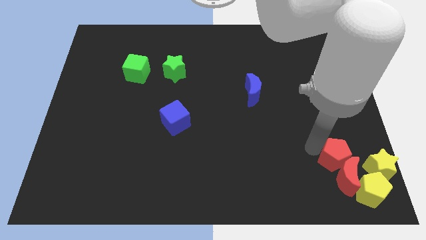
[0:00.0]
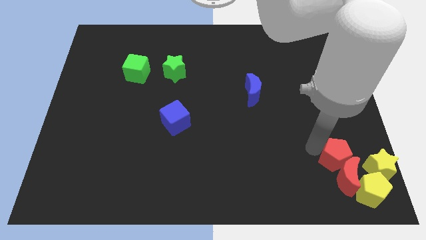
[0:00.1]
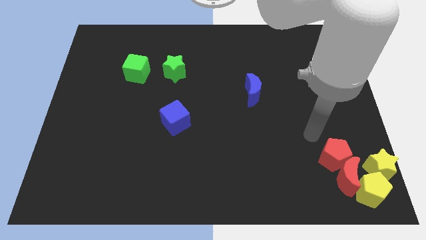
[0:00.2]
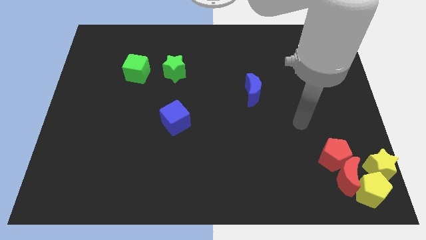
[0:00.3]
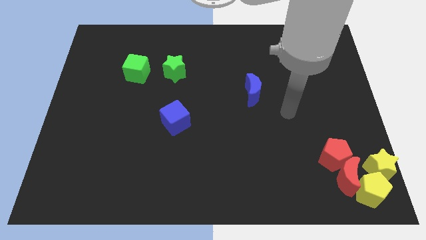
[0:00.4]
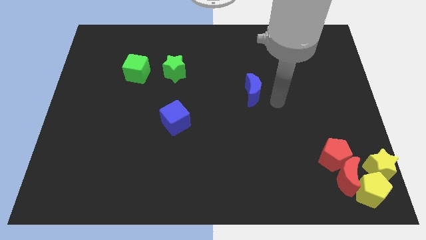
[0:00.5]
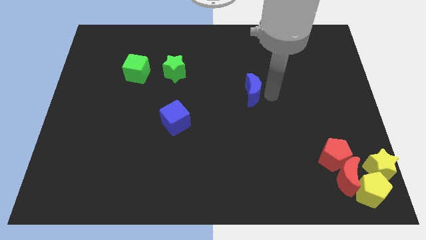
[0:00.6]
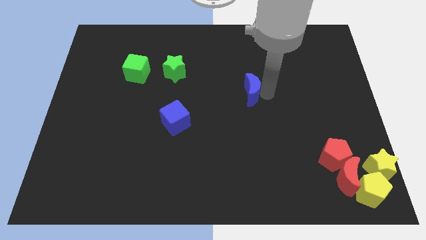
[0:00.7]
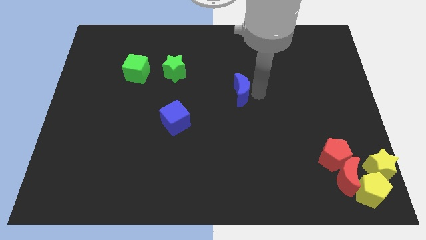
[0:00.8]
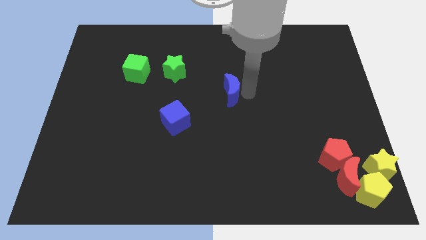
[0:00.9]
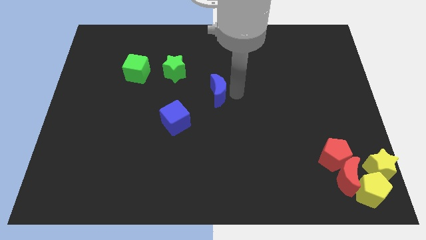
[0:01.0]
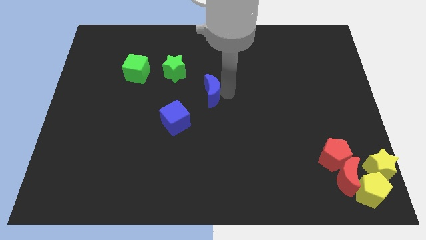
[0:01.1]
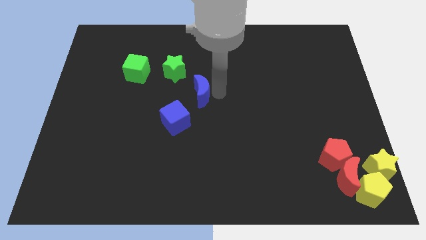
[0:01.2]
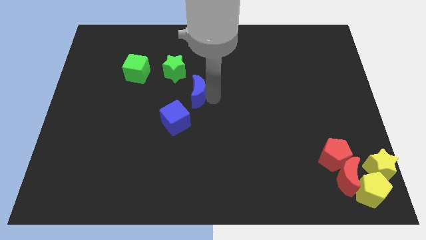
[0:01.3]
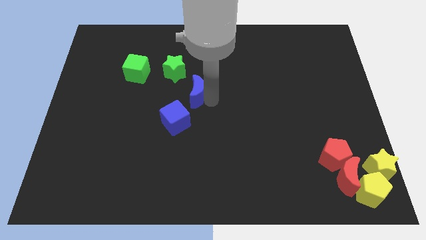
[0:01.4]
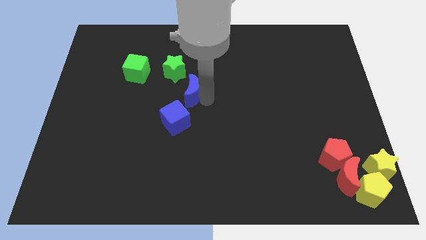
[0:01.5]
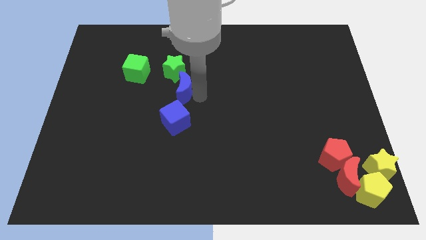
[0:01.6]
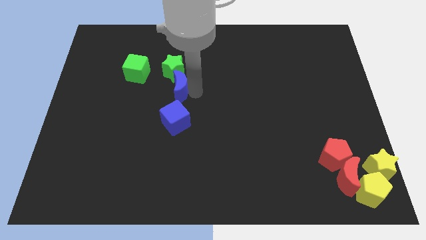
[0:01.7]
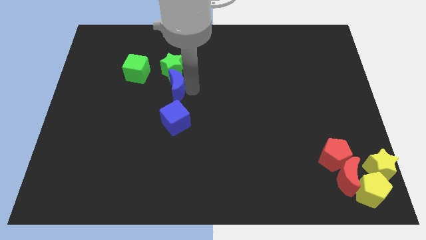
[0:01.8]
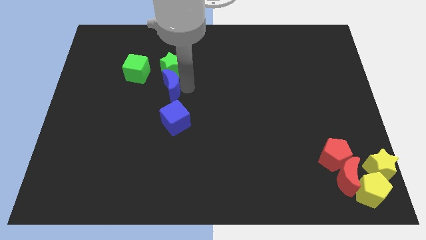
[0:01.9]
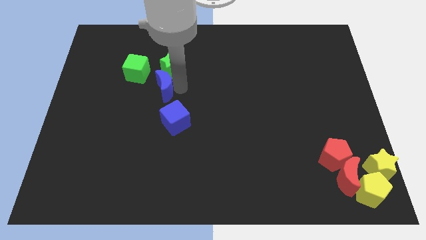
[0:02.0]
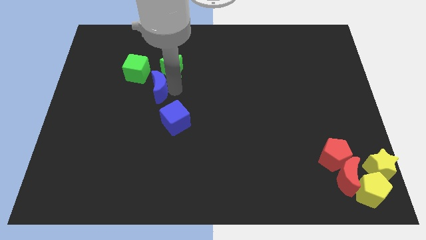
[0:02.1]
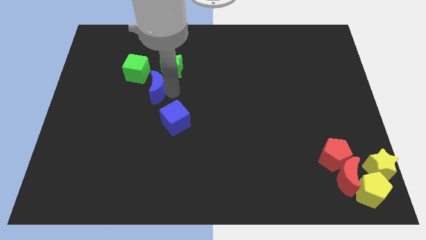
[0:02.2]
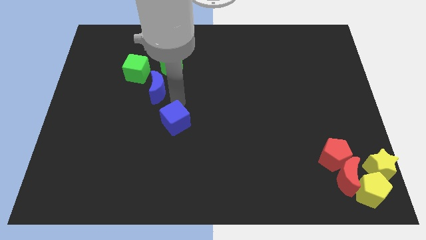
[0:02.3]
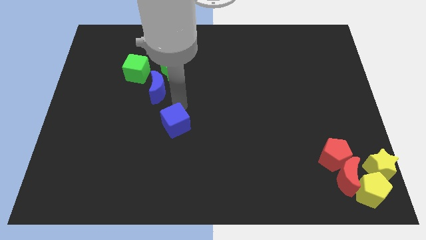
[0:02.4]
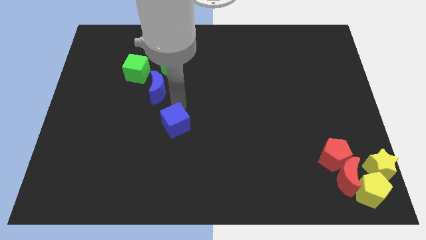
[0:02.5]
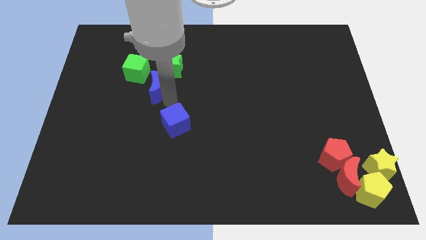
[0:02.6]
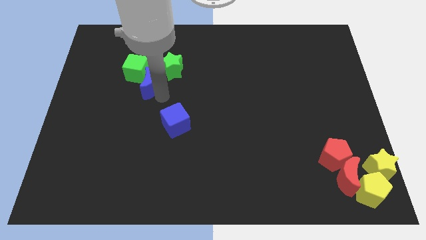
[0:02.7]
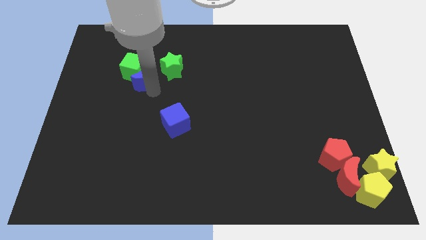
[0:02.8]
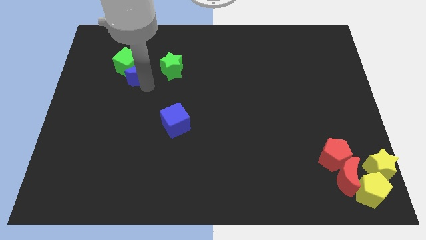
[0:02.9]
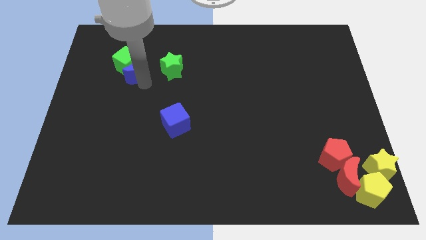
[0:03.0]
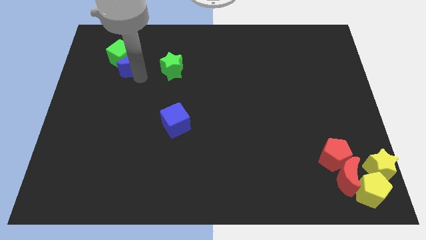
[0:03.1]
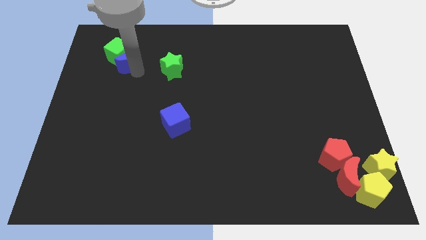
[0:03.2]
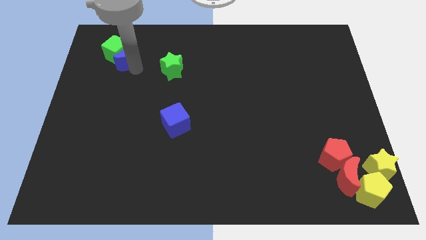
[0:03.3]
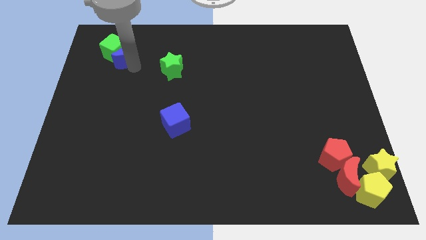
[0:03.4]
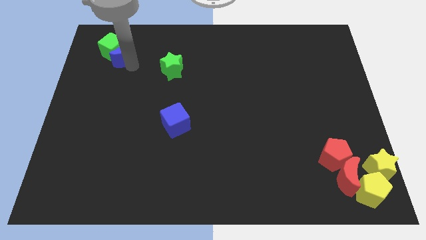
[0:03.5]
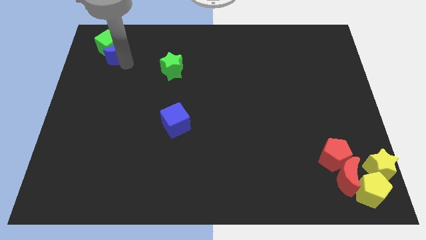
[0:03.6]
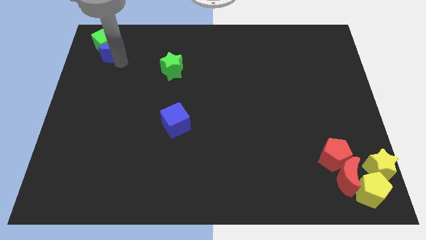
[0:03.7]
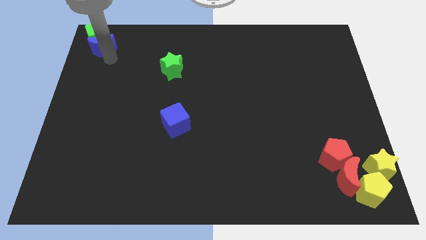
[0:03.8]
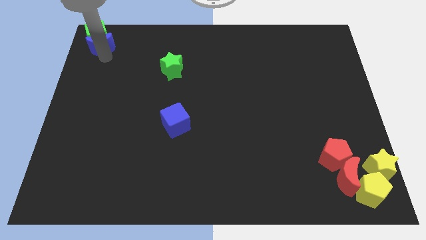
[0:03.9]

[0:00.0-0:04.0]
push the blue moon and green cube towards the top left corner of the board

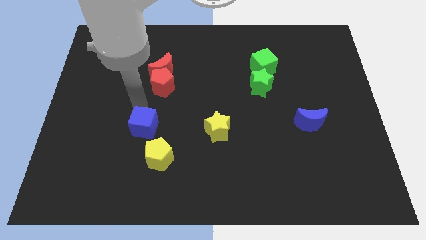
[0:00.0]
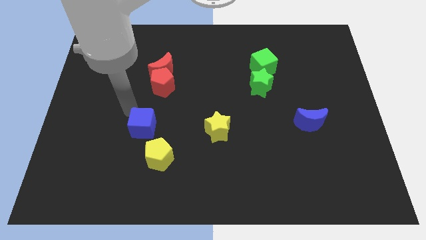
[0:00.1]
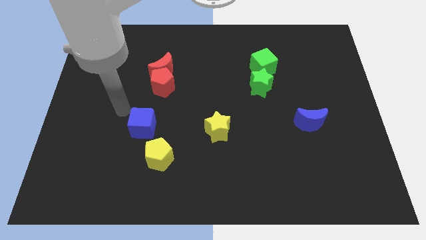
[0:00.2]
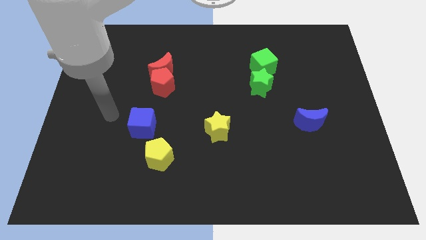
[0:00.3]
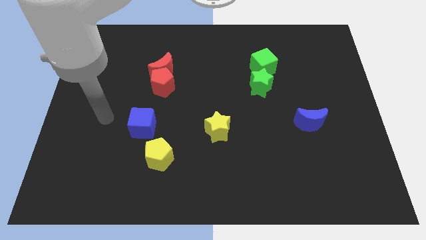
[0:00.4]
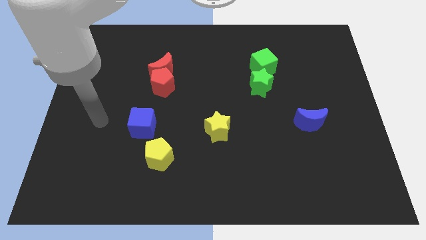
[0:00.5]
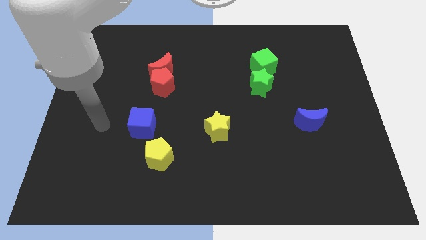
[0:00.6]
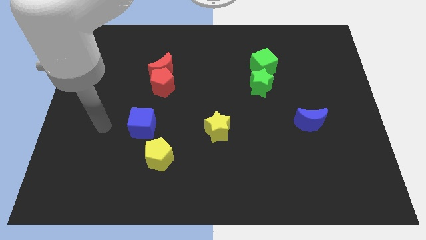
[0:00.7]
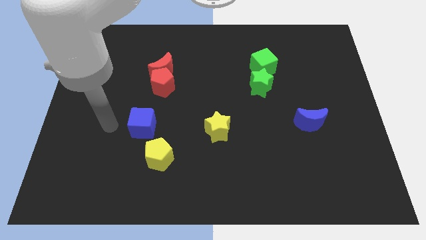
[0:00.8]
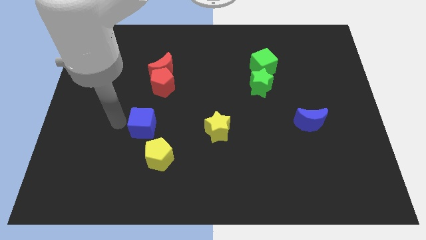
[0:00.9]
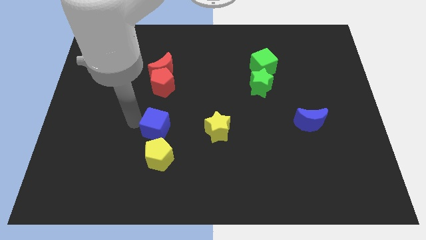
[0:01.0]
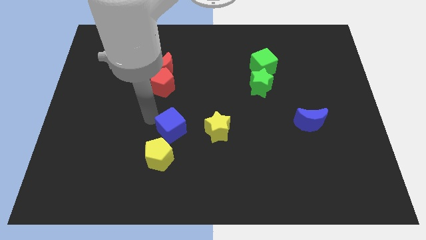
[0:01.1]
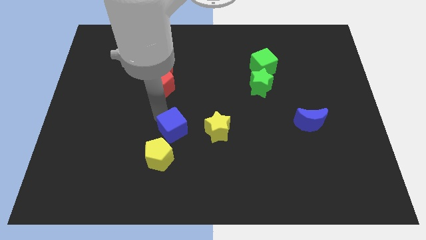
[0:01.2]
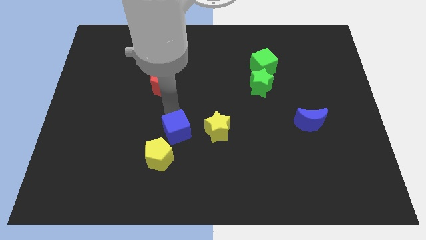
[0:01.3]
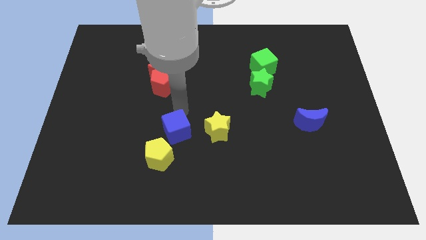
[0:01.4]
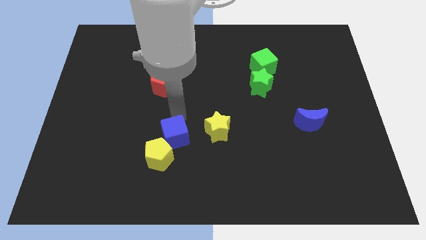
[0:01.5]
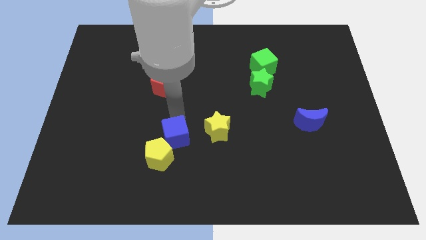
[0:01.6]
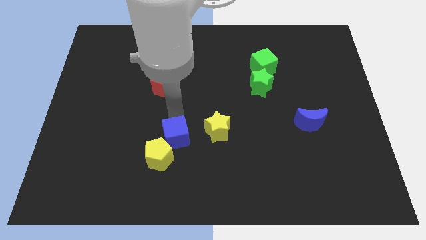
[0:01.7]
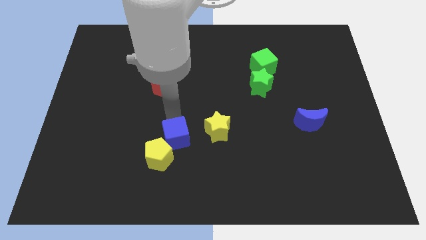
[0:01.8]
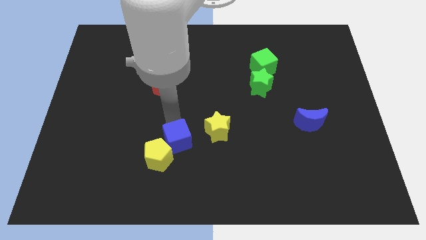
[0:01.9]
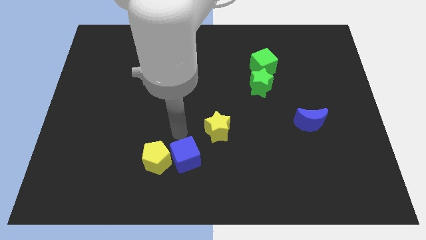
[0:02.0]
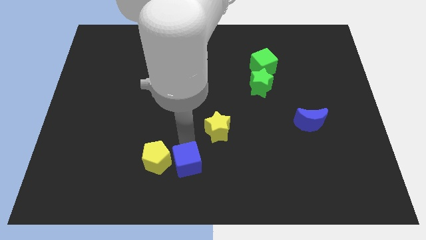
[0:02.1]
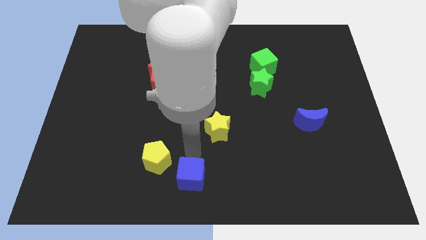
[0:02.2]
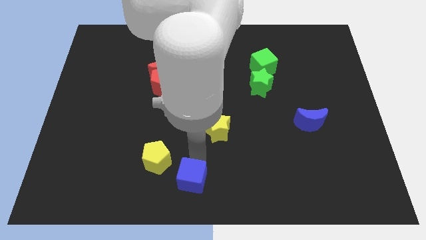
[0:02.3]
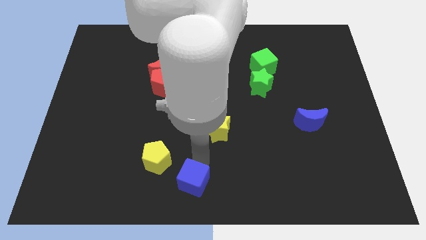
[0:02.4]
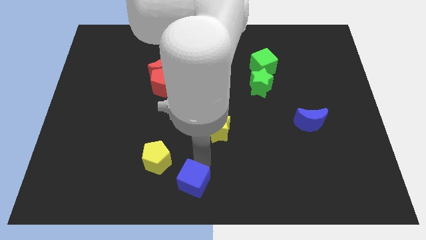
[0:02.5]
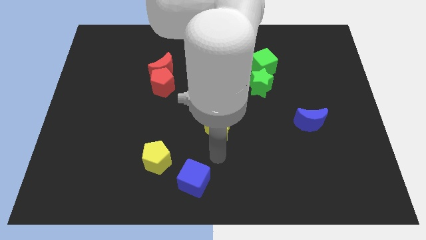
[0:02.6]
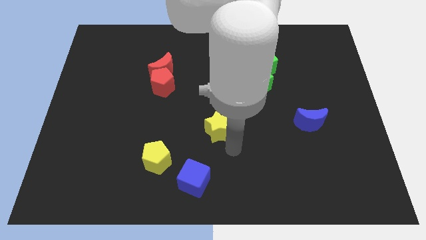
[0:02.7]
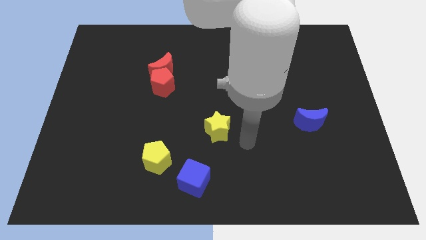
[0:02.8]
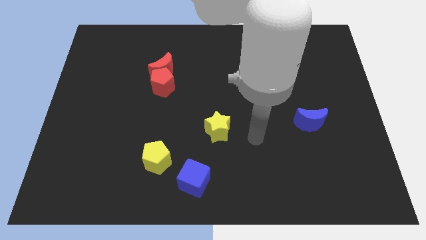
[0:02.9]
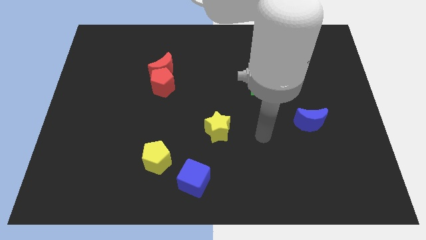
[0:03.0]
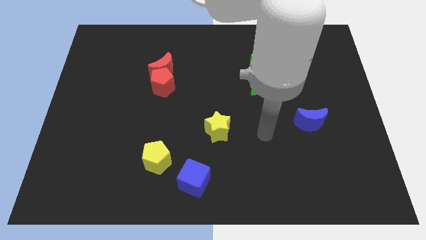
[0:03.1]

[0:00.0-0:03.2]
move the blue cube towards the bottom center

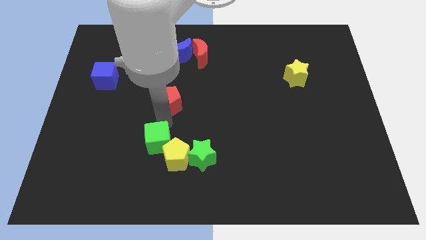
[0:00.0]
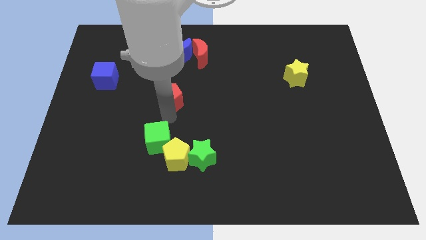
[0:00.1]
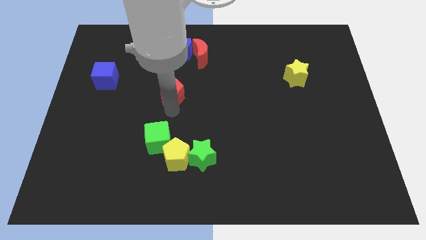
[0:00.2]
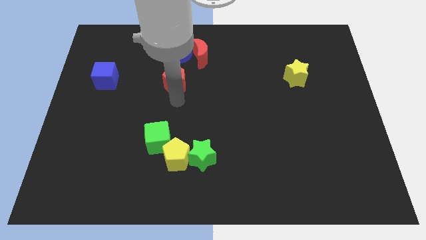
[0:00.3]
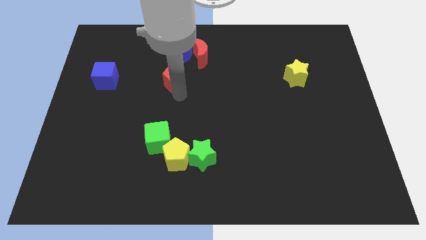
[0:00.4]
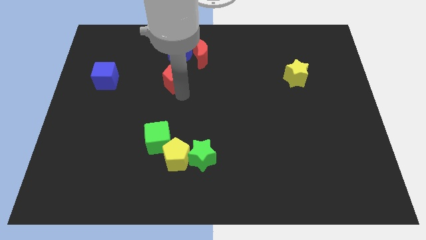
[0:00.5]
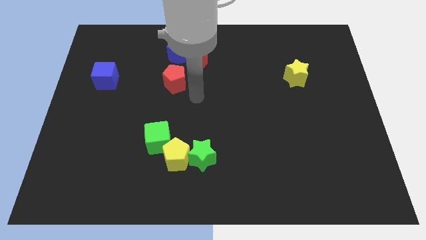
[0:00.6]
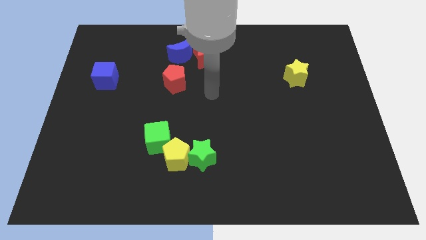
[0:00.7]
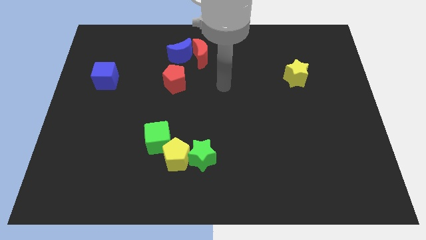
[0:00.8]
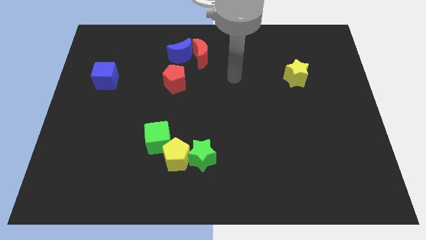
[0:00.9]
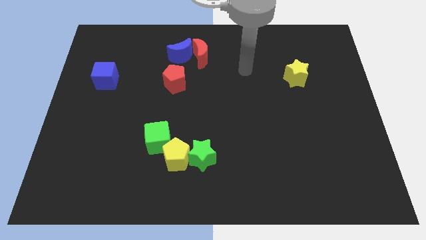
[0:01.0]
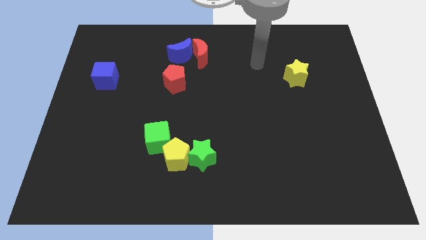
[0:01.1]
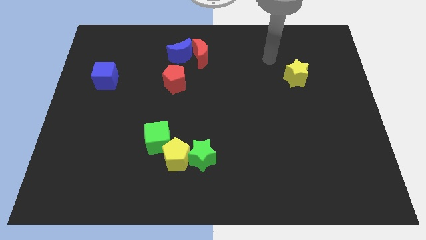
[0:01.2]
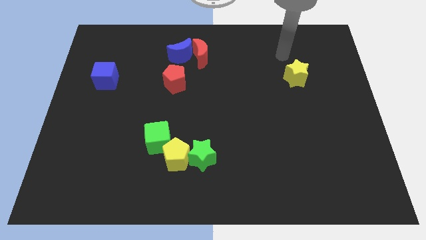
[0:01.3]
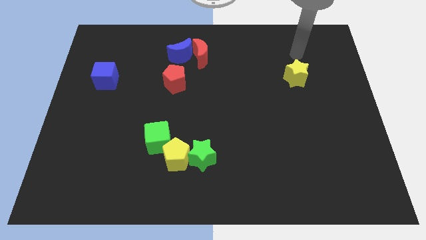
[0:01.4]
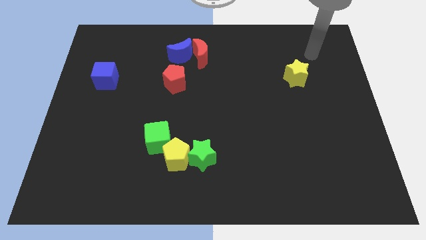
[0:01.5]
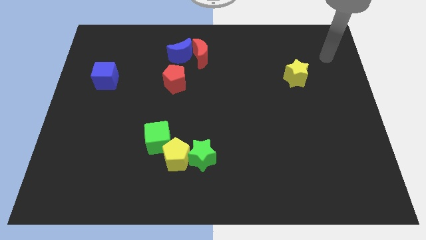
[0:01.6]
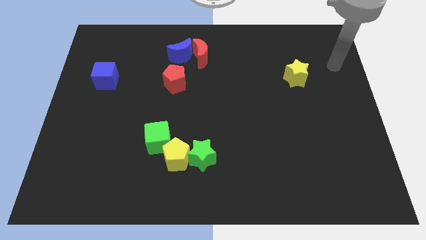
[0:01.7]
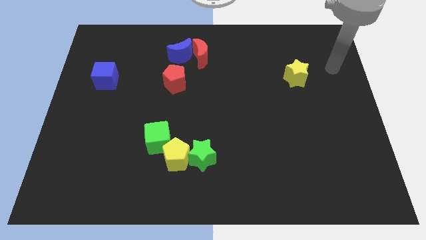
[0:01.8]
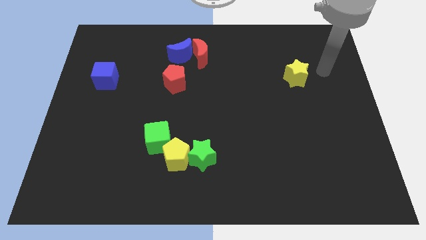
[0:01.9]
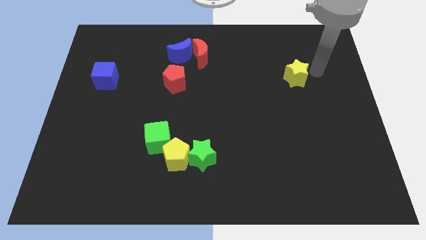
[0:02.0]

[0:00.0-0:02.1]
move your arm towards the yellow star
